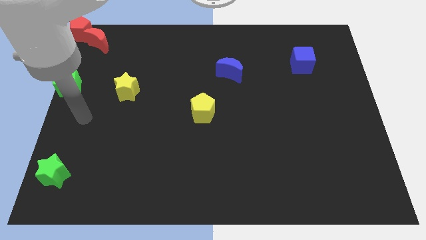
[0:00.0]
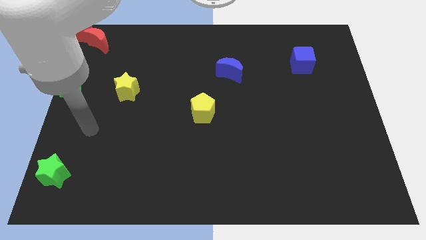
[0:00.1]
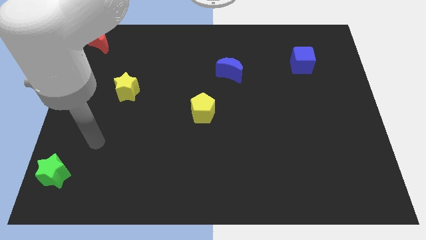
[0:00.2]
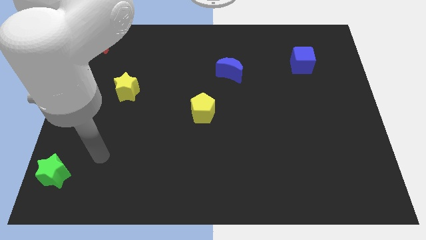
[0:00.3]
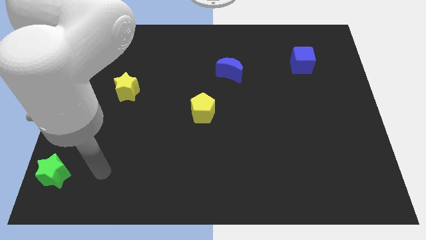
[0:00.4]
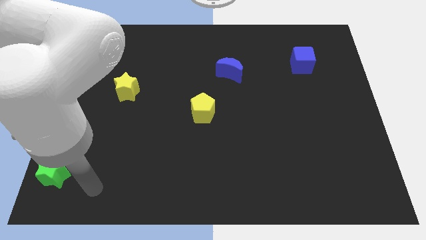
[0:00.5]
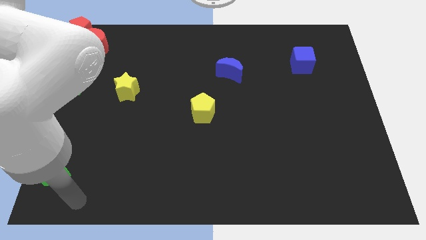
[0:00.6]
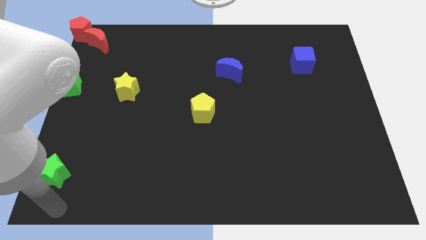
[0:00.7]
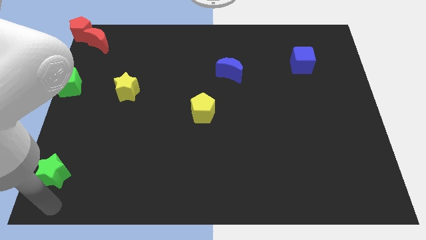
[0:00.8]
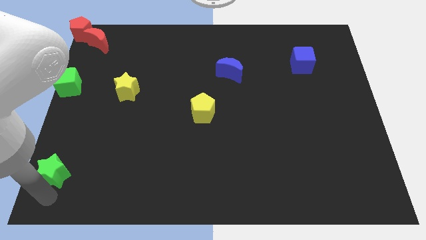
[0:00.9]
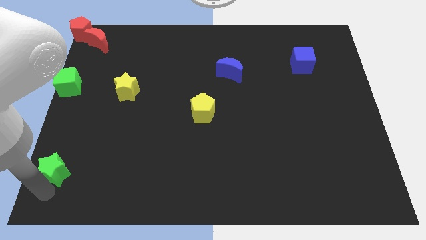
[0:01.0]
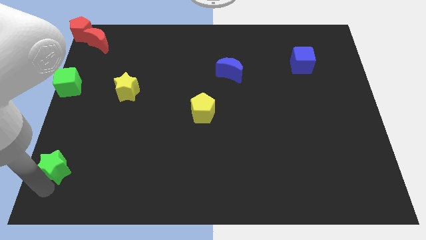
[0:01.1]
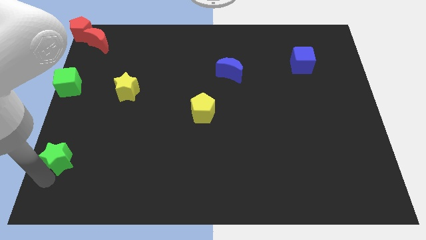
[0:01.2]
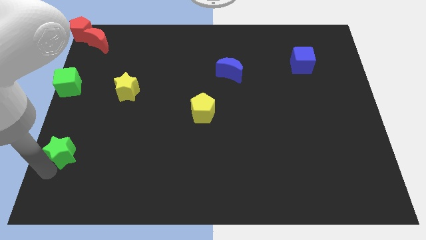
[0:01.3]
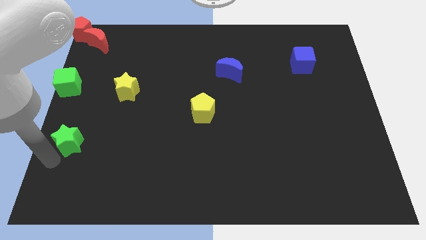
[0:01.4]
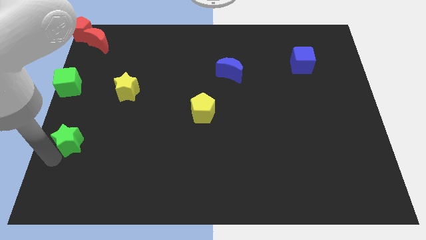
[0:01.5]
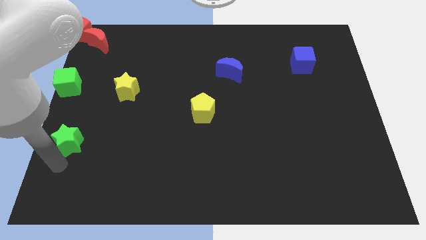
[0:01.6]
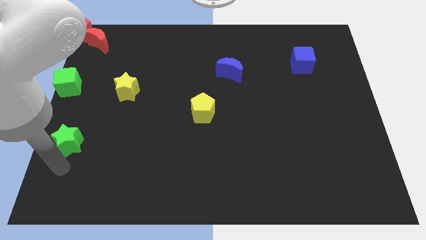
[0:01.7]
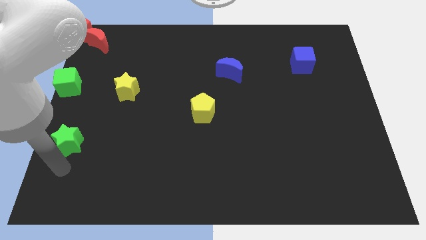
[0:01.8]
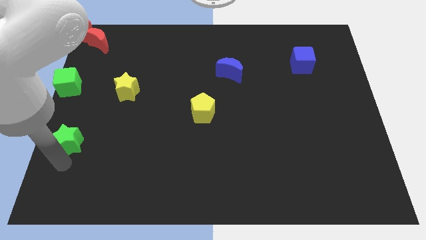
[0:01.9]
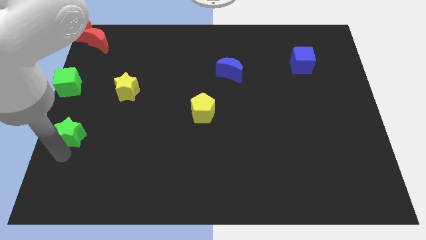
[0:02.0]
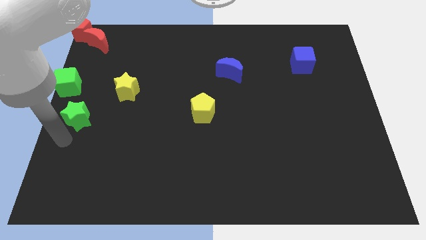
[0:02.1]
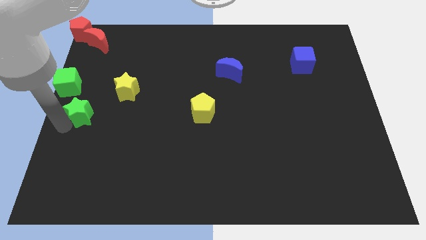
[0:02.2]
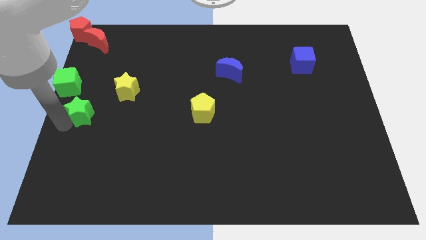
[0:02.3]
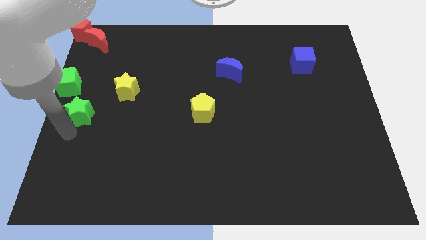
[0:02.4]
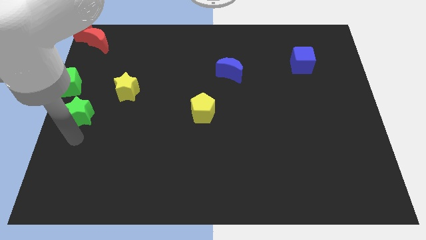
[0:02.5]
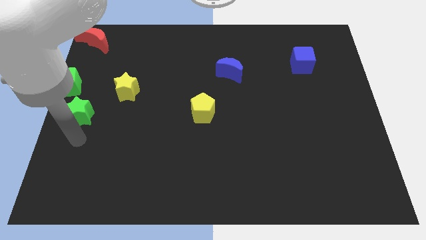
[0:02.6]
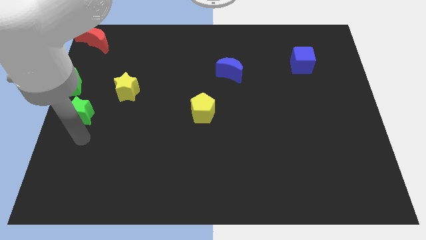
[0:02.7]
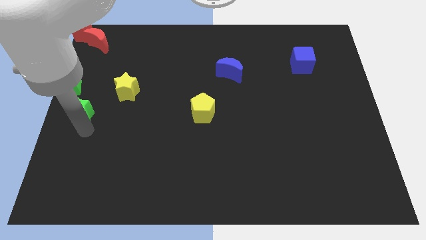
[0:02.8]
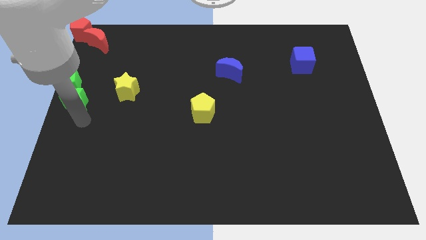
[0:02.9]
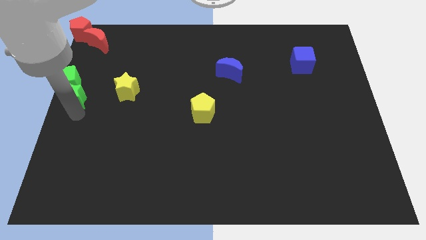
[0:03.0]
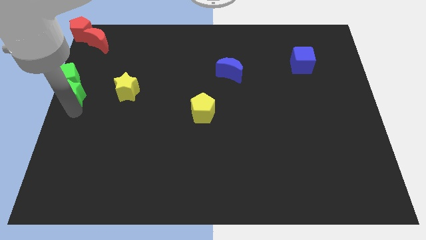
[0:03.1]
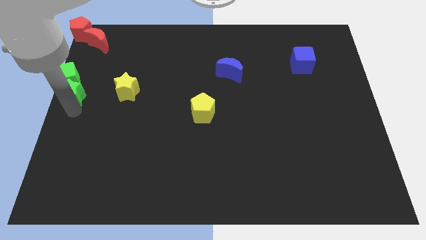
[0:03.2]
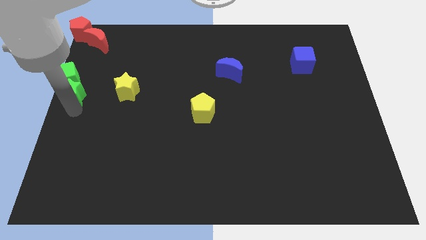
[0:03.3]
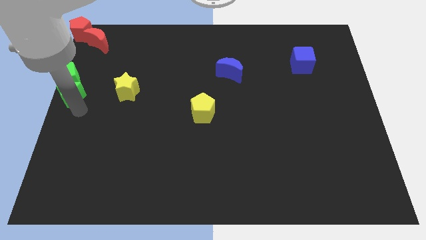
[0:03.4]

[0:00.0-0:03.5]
push the green star into the green cube

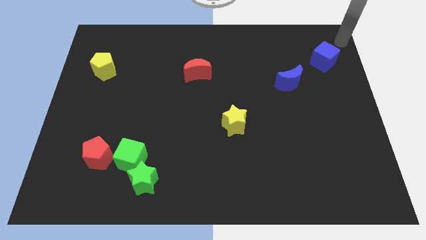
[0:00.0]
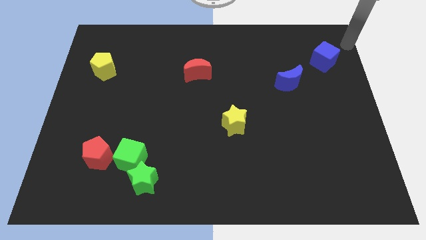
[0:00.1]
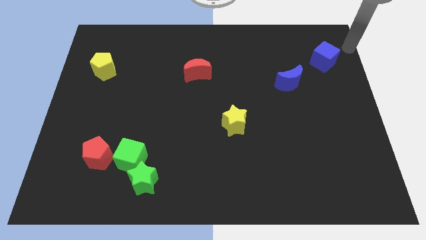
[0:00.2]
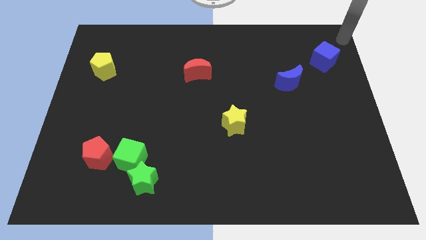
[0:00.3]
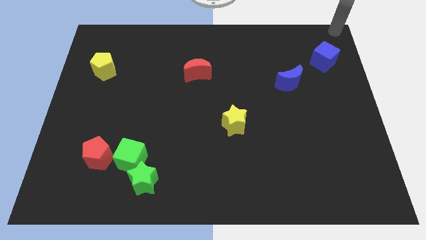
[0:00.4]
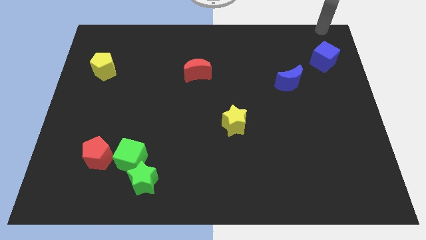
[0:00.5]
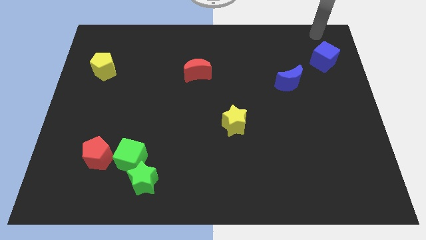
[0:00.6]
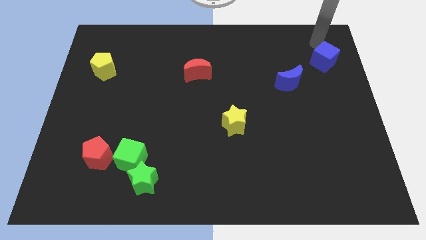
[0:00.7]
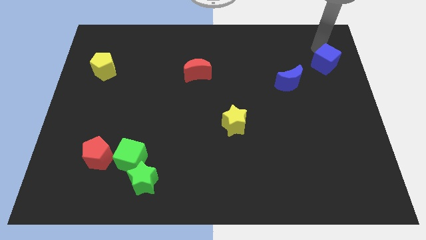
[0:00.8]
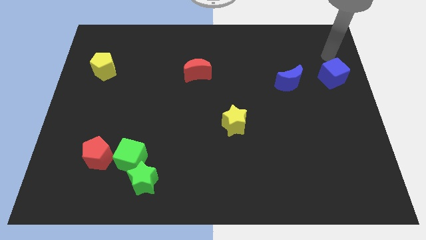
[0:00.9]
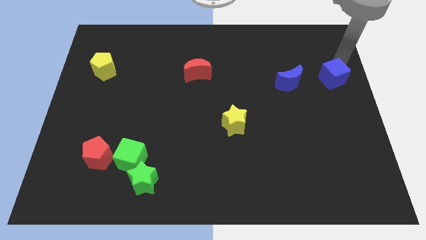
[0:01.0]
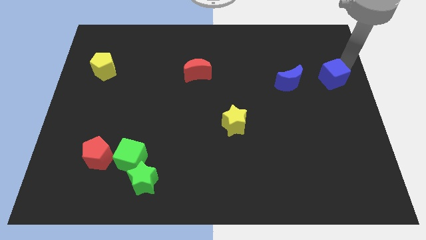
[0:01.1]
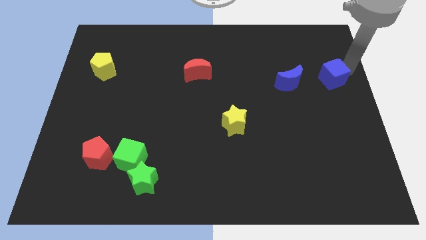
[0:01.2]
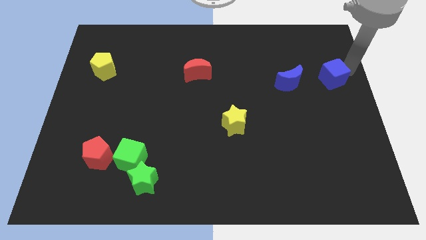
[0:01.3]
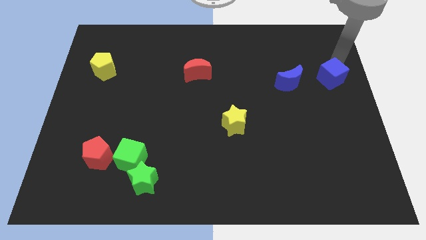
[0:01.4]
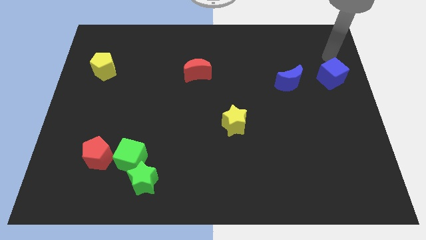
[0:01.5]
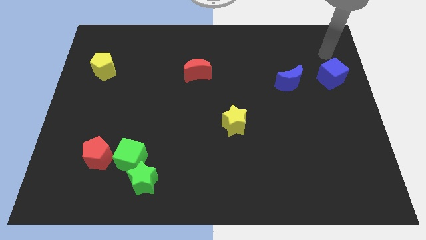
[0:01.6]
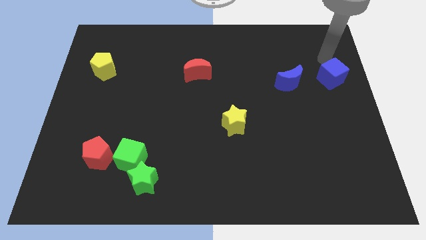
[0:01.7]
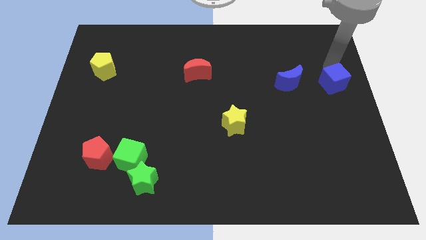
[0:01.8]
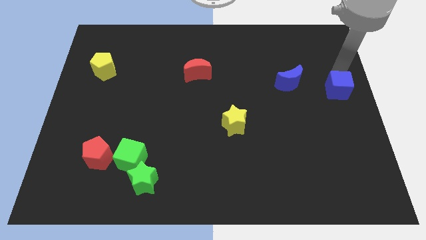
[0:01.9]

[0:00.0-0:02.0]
move the blue cube to the bottom

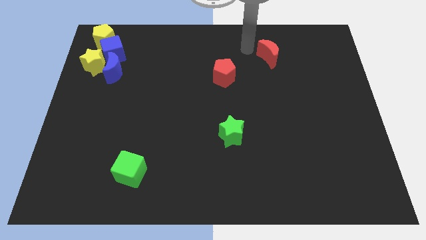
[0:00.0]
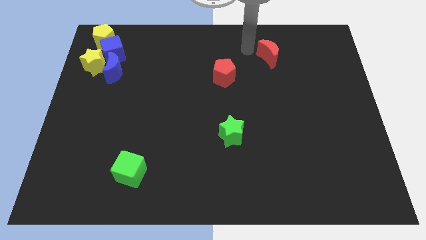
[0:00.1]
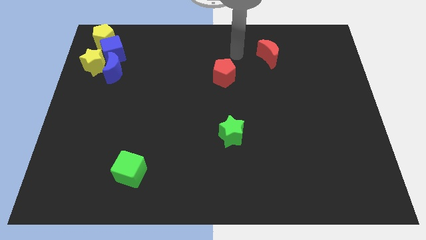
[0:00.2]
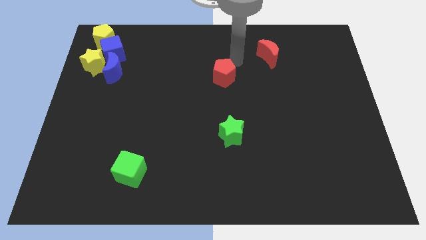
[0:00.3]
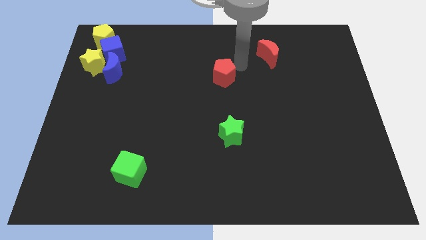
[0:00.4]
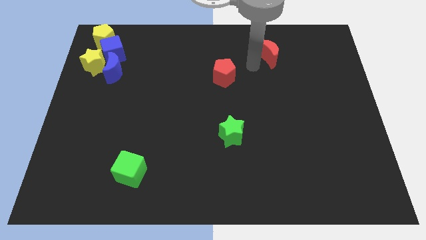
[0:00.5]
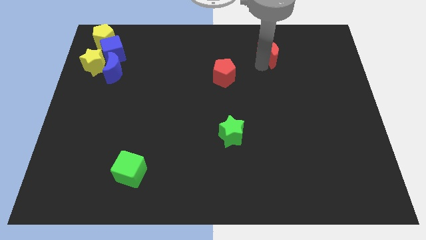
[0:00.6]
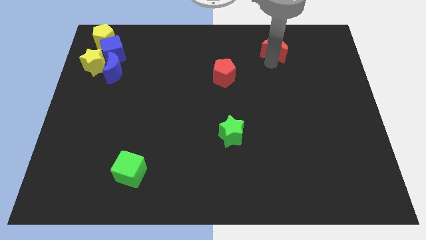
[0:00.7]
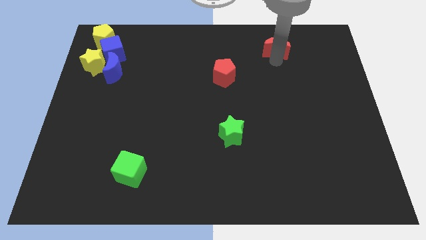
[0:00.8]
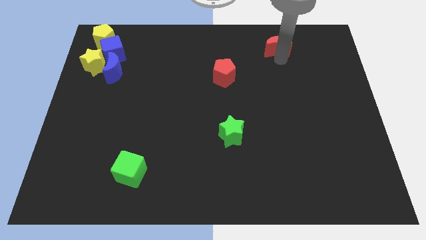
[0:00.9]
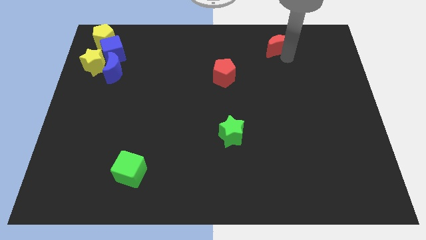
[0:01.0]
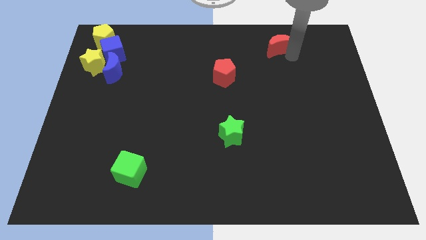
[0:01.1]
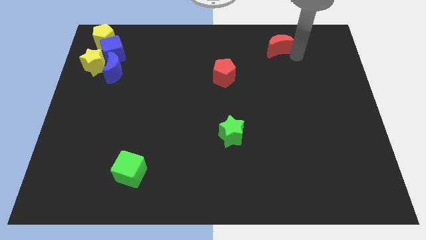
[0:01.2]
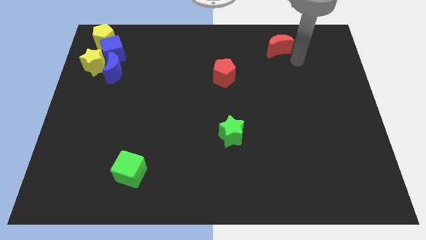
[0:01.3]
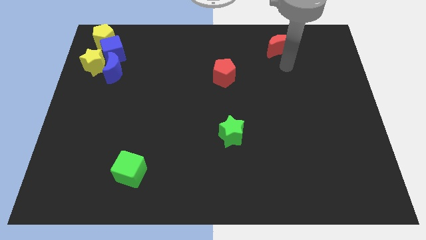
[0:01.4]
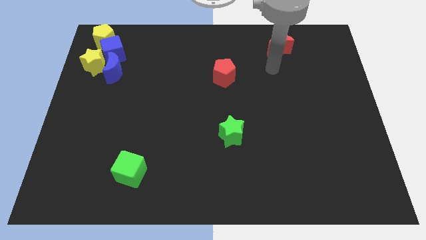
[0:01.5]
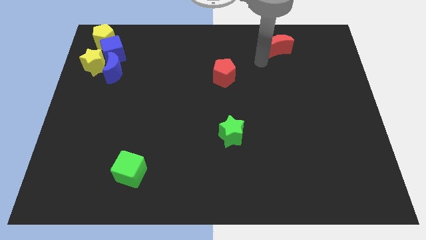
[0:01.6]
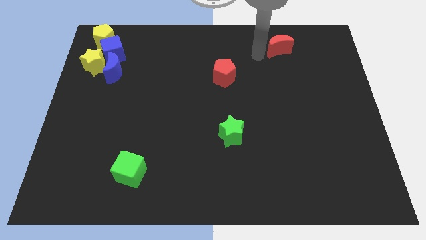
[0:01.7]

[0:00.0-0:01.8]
touch right to the red moon

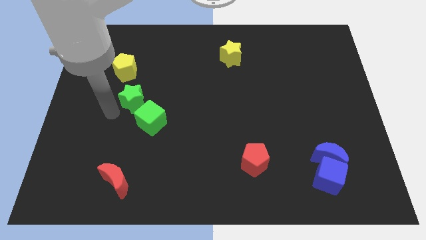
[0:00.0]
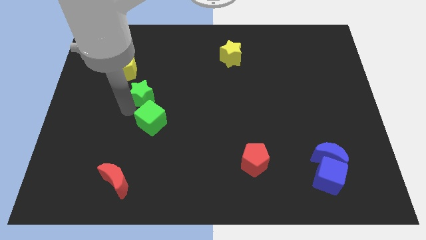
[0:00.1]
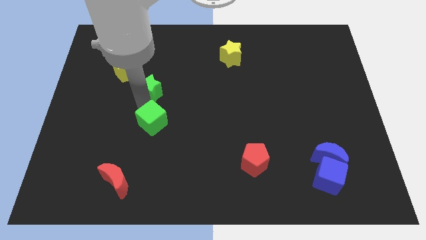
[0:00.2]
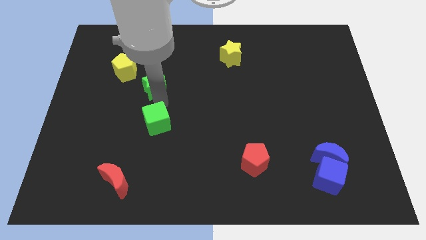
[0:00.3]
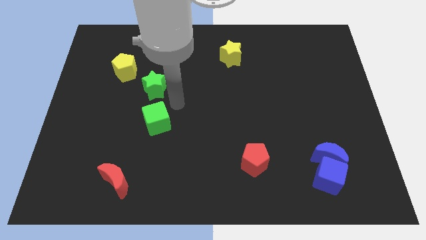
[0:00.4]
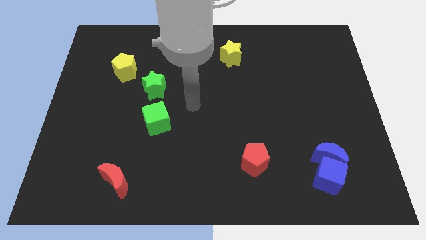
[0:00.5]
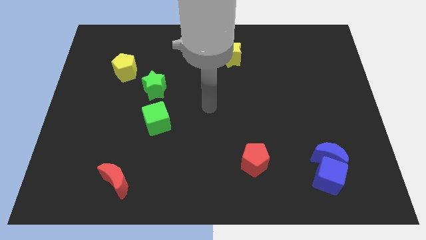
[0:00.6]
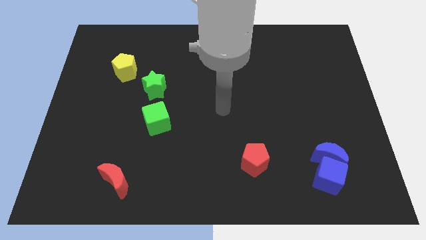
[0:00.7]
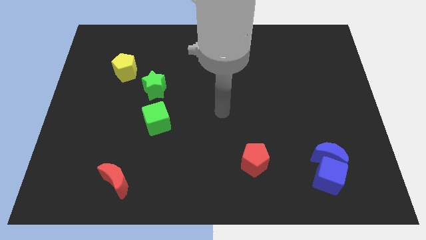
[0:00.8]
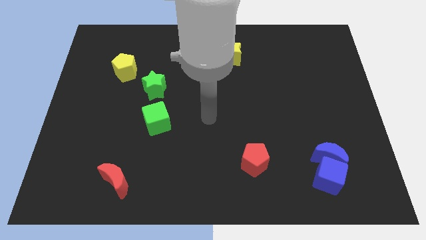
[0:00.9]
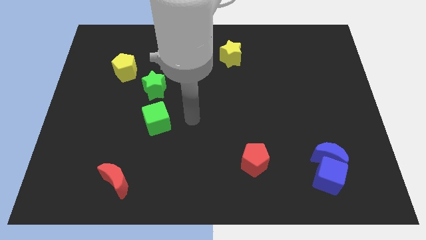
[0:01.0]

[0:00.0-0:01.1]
move the green star to the bottom right of yellow pentagon

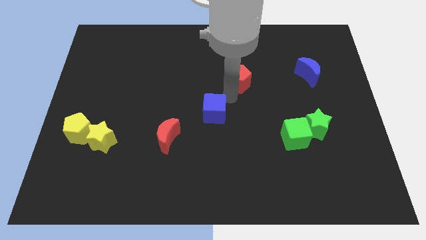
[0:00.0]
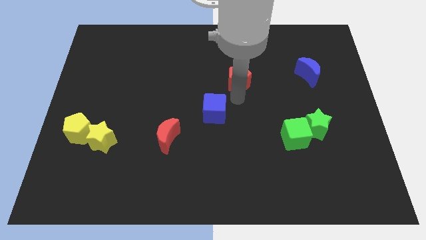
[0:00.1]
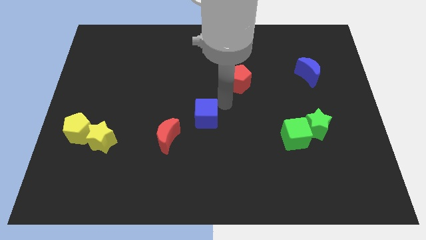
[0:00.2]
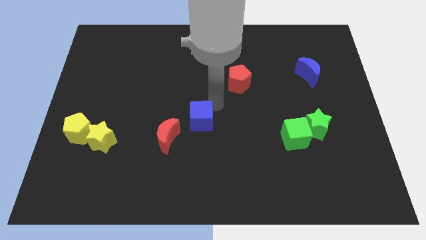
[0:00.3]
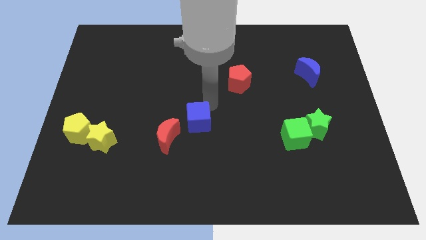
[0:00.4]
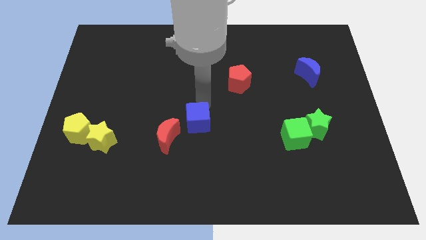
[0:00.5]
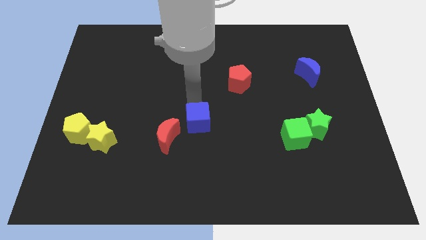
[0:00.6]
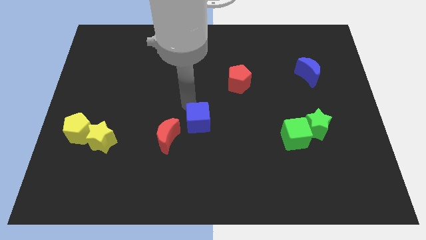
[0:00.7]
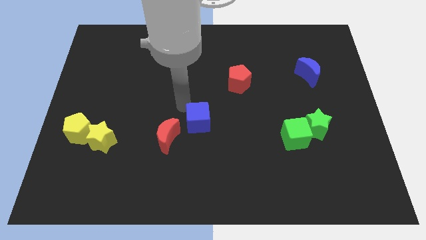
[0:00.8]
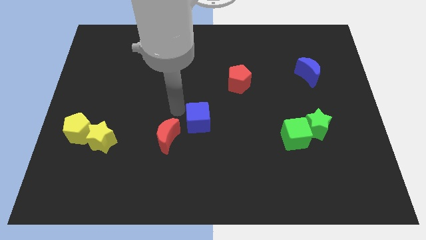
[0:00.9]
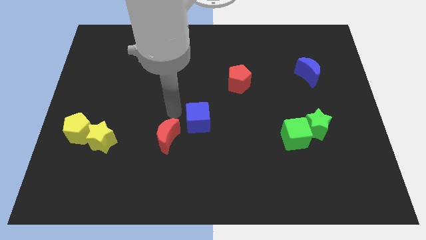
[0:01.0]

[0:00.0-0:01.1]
place the blue cube towards the top right side of the red crescent
